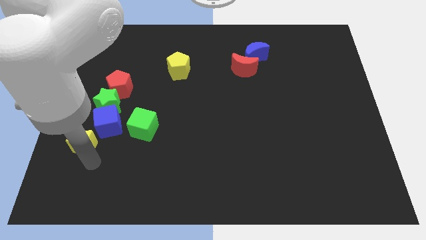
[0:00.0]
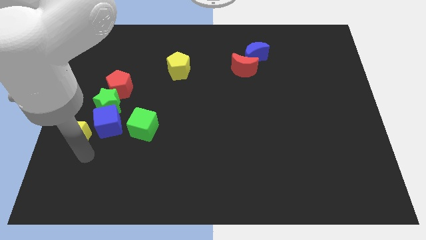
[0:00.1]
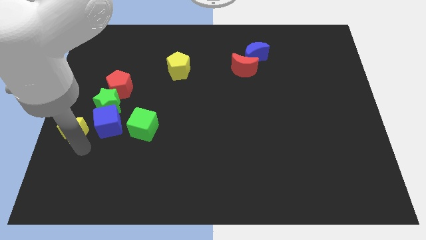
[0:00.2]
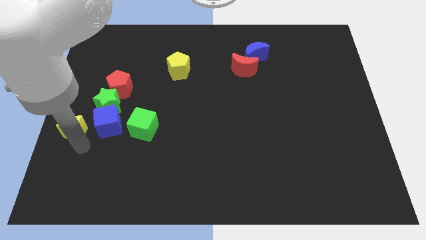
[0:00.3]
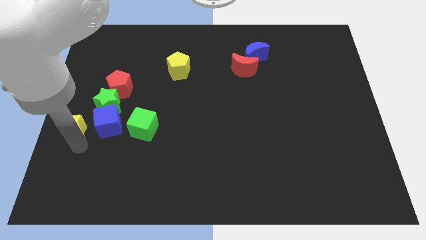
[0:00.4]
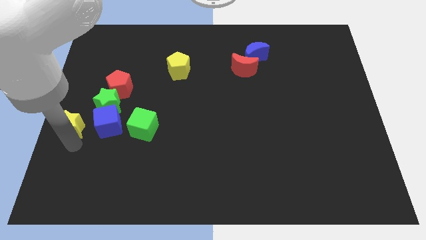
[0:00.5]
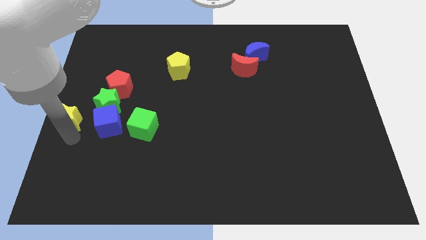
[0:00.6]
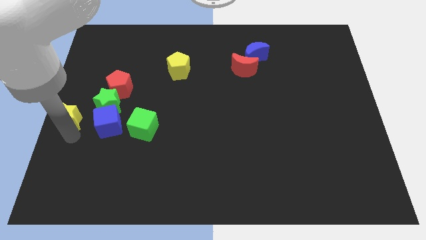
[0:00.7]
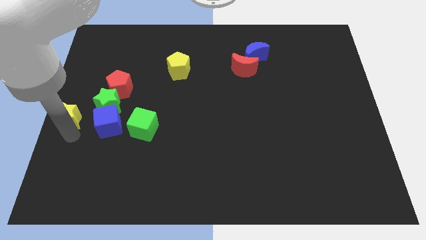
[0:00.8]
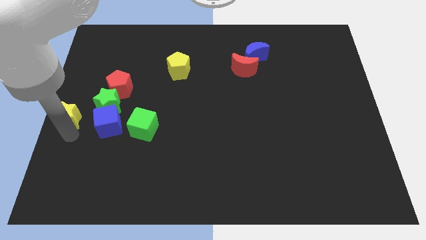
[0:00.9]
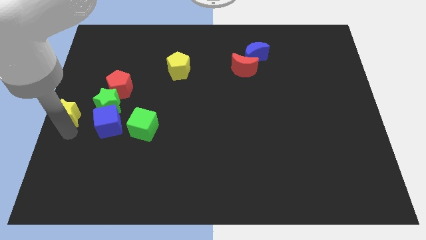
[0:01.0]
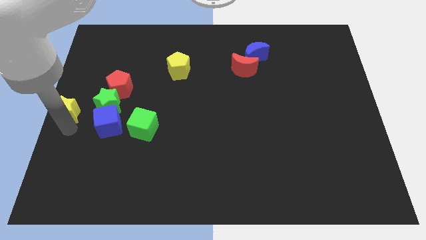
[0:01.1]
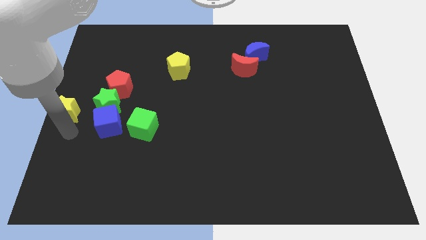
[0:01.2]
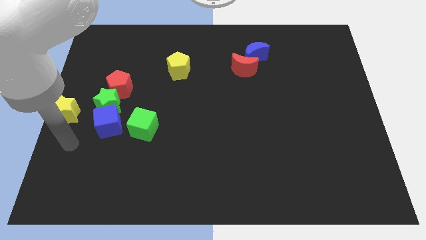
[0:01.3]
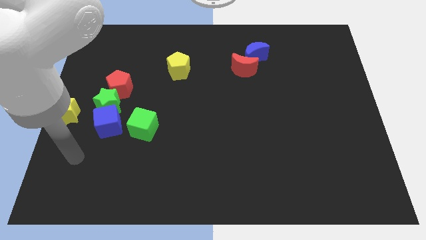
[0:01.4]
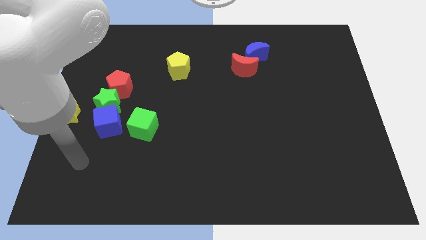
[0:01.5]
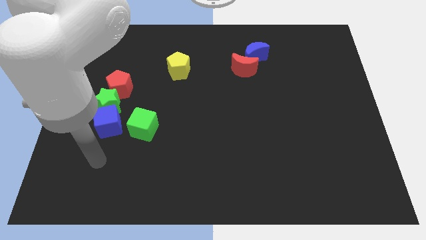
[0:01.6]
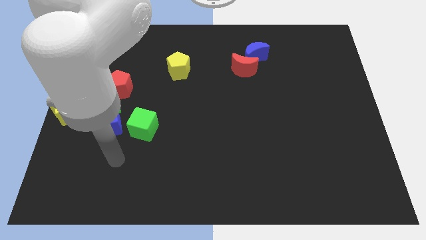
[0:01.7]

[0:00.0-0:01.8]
place the yellow star at the center left of the board

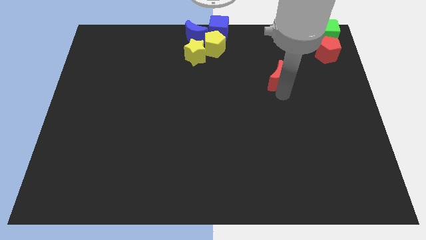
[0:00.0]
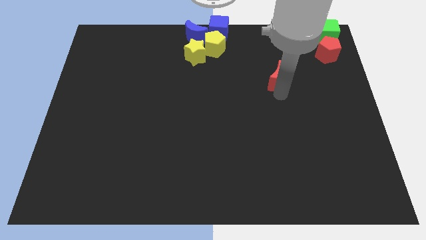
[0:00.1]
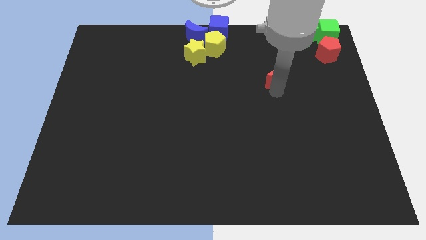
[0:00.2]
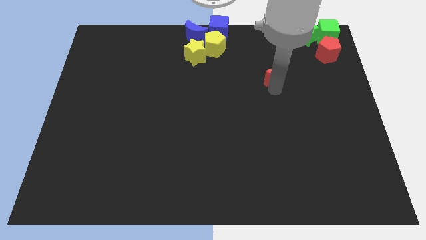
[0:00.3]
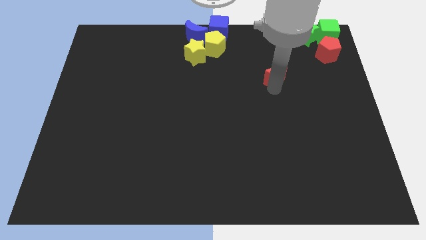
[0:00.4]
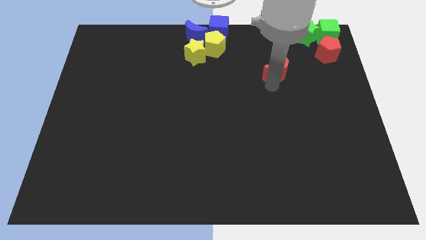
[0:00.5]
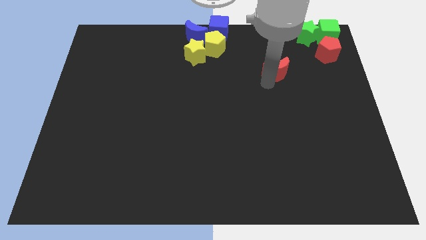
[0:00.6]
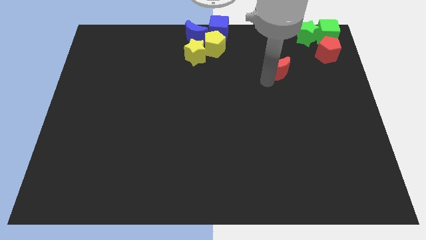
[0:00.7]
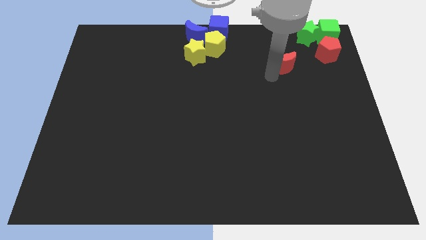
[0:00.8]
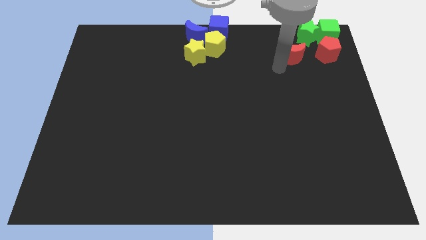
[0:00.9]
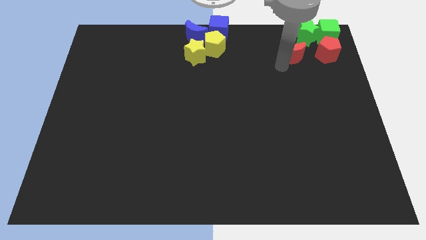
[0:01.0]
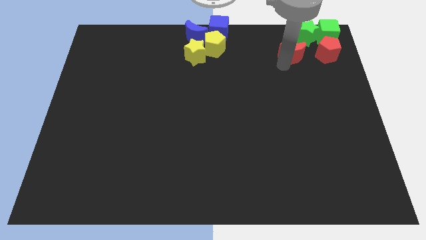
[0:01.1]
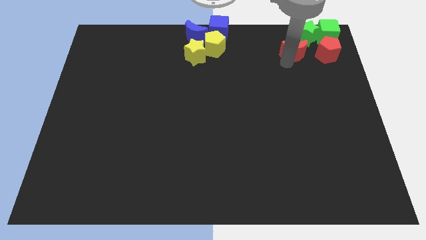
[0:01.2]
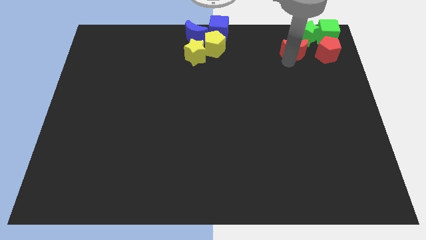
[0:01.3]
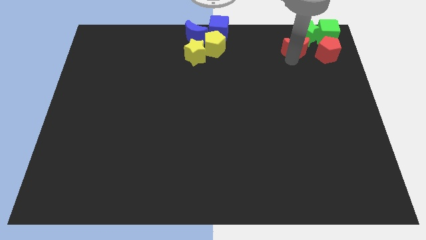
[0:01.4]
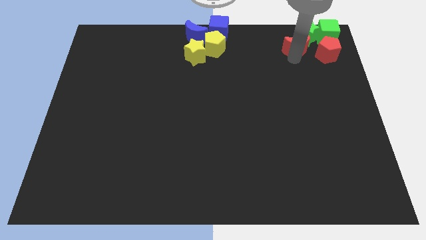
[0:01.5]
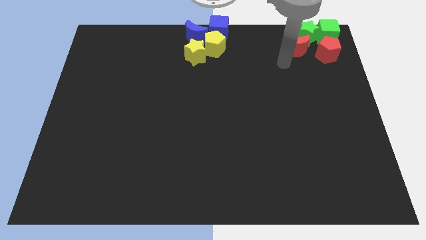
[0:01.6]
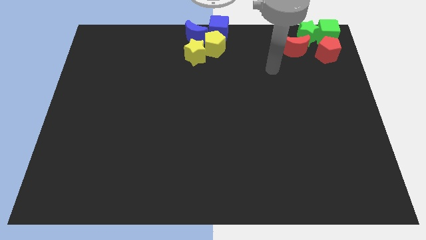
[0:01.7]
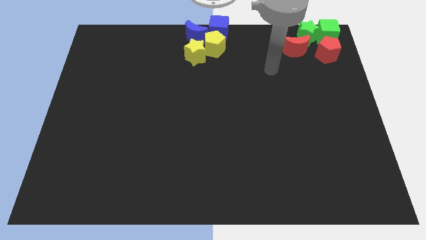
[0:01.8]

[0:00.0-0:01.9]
place red crescent to the left side of the red pentagon

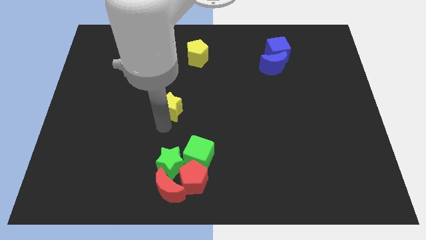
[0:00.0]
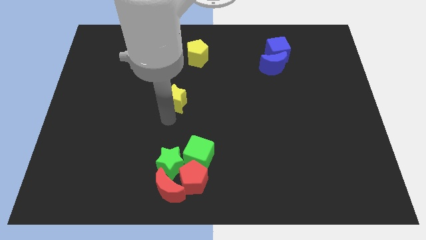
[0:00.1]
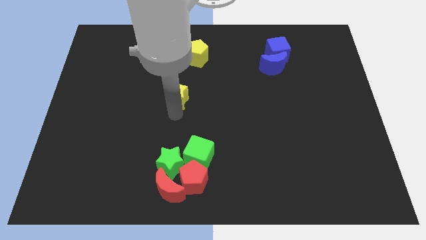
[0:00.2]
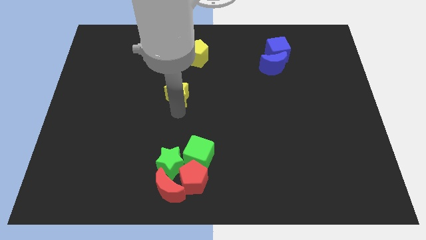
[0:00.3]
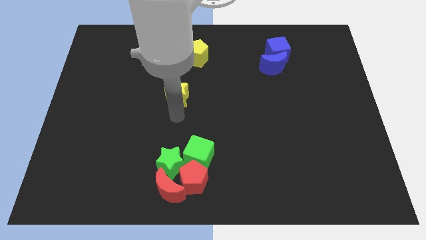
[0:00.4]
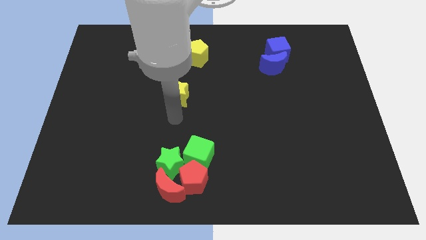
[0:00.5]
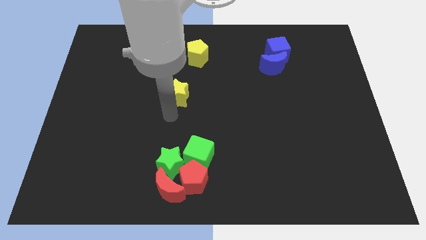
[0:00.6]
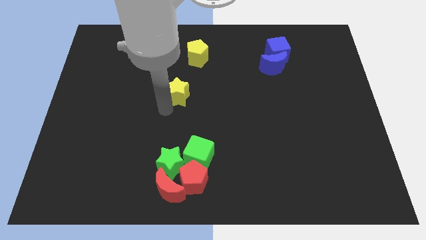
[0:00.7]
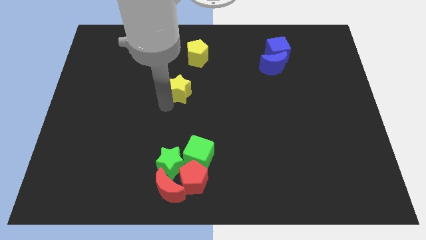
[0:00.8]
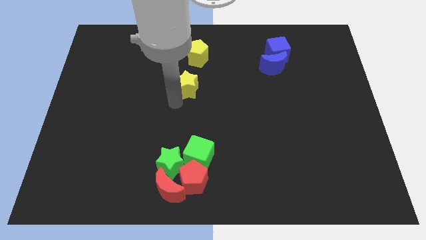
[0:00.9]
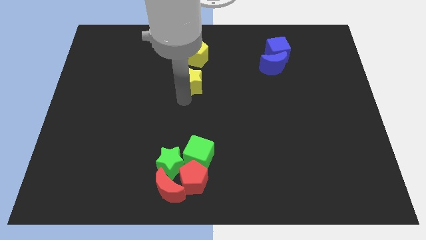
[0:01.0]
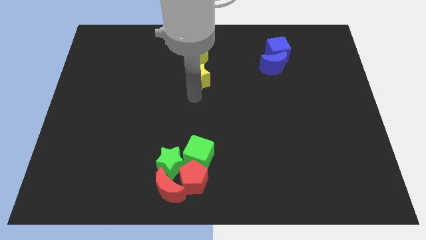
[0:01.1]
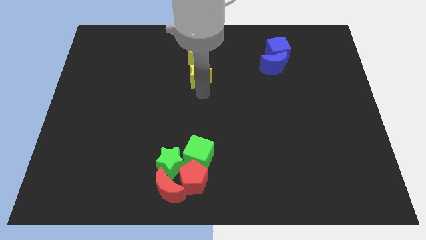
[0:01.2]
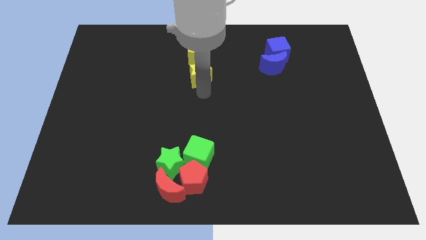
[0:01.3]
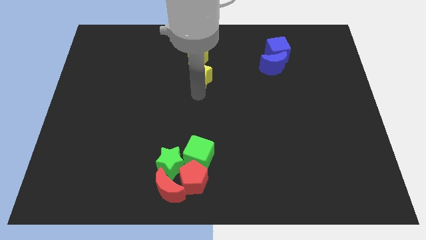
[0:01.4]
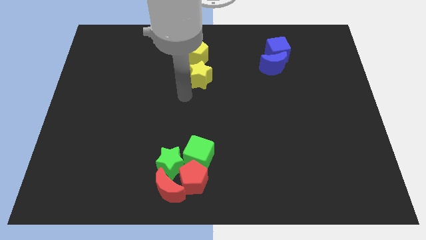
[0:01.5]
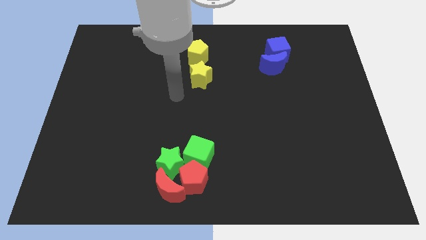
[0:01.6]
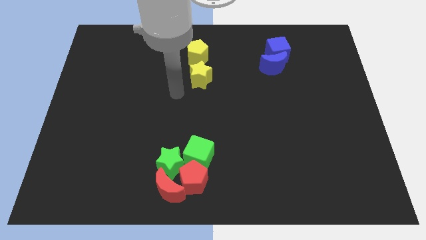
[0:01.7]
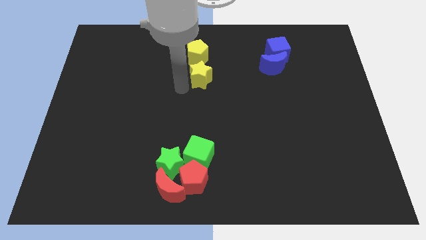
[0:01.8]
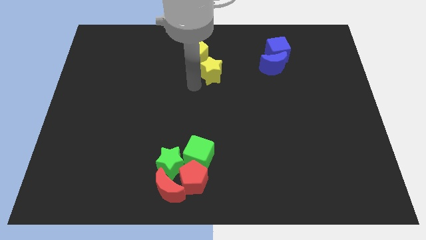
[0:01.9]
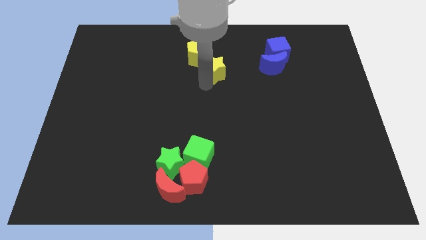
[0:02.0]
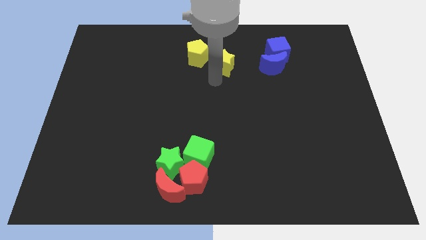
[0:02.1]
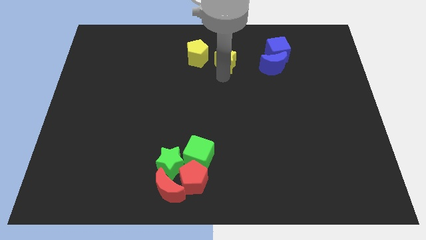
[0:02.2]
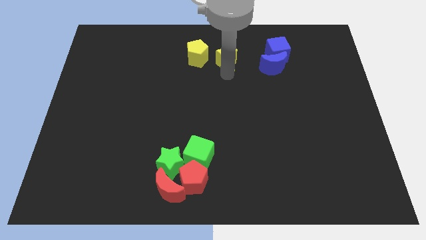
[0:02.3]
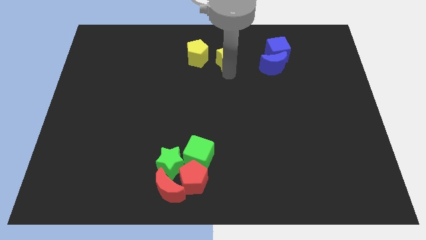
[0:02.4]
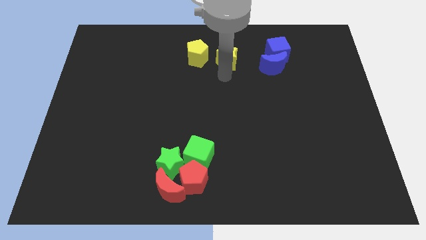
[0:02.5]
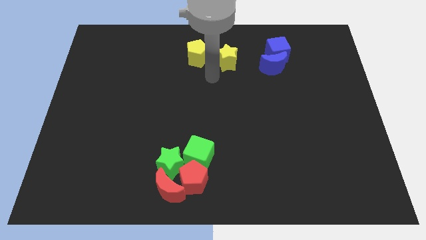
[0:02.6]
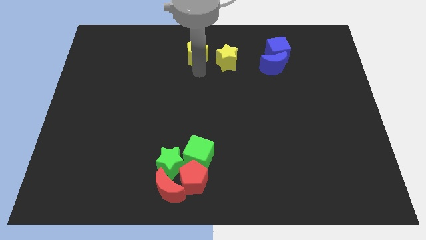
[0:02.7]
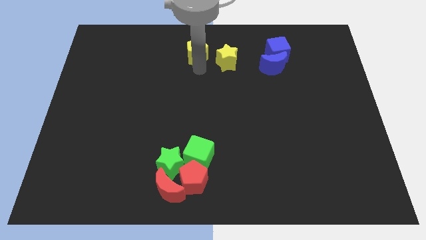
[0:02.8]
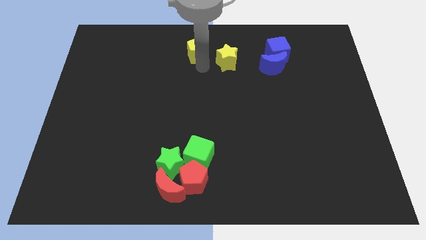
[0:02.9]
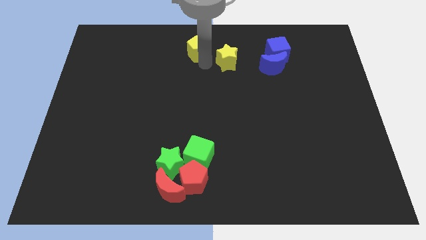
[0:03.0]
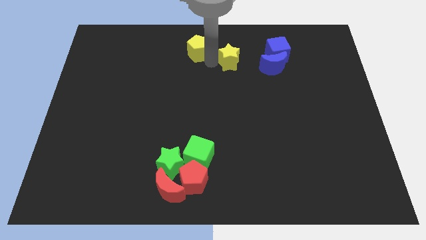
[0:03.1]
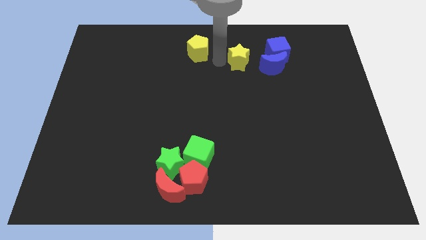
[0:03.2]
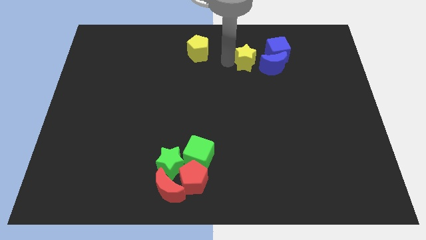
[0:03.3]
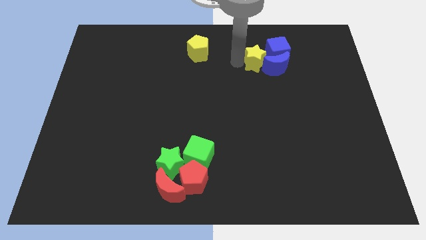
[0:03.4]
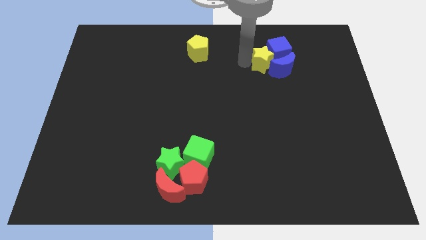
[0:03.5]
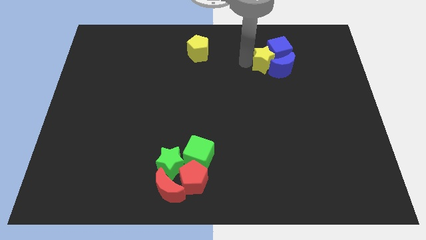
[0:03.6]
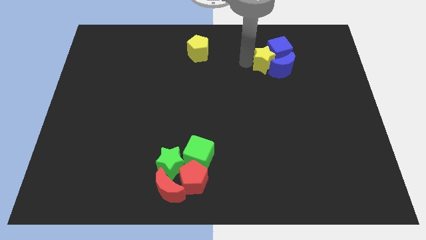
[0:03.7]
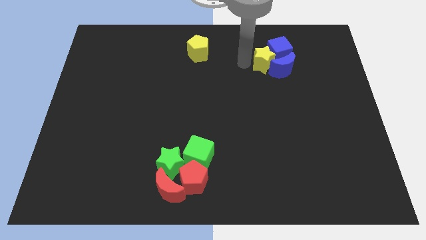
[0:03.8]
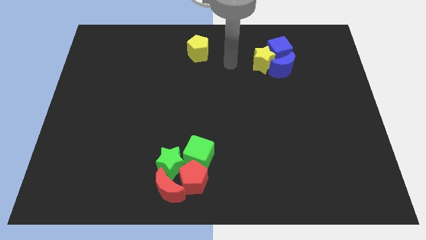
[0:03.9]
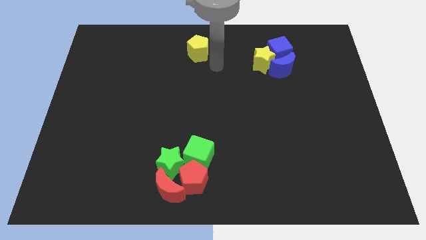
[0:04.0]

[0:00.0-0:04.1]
move the yellow star into blue blocks

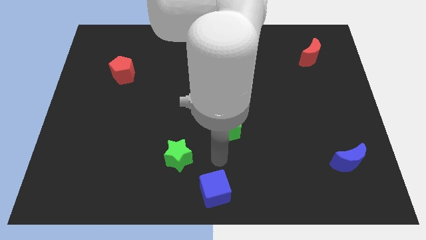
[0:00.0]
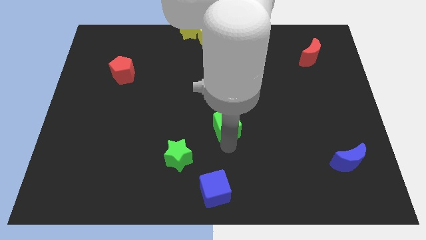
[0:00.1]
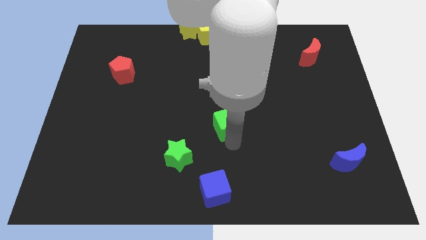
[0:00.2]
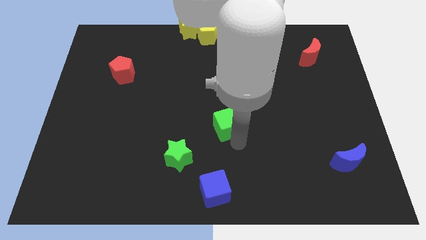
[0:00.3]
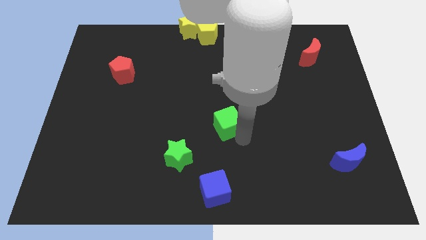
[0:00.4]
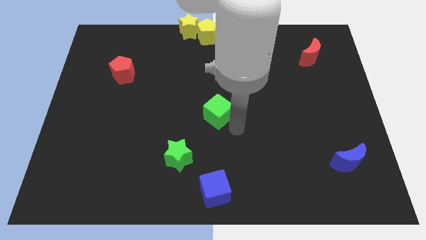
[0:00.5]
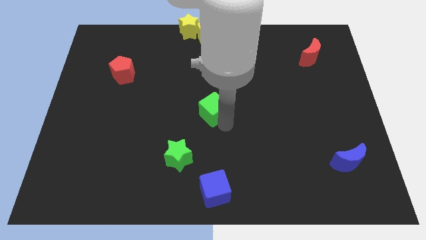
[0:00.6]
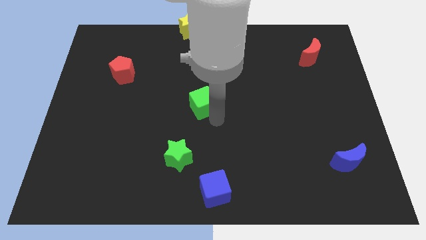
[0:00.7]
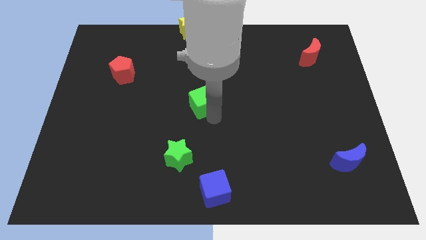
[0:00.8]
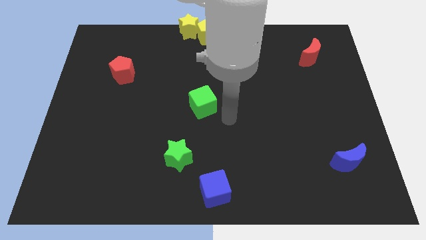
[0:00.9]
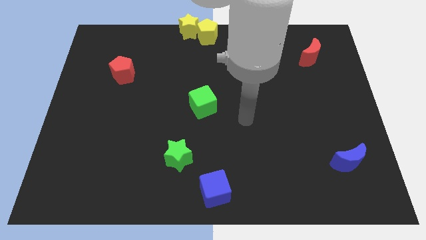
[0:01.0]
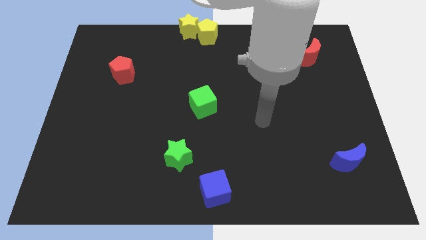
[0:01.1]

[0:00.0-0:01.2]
place green cube to the center of the board

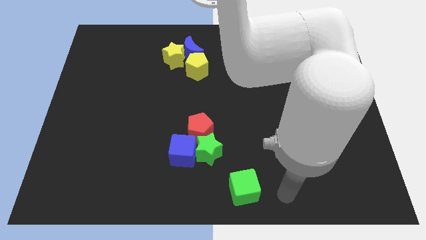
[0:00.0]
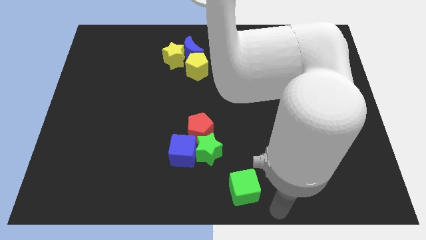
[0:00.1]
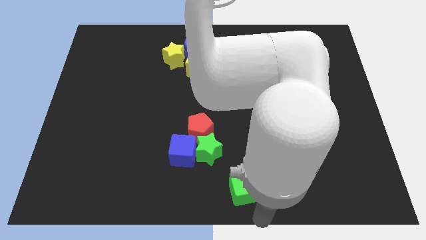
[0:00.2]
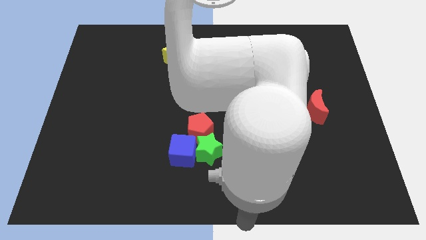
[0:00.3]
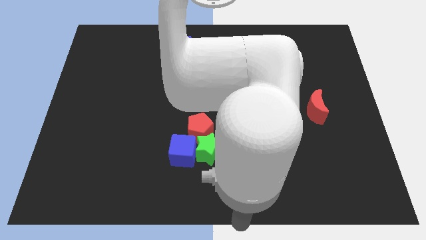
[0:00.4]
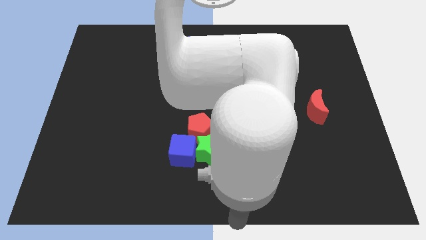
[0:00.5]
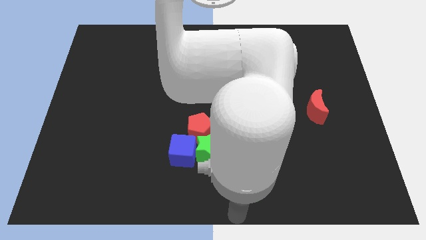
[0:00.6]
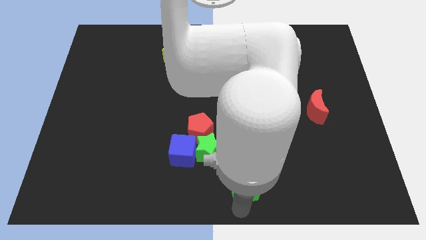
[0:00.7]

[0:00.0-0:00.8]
touch the bottom of green cube
